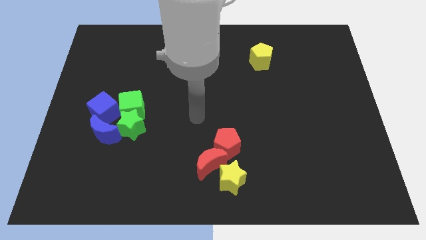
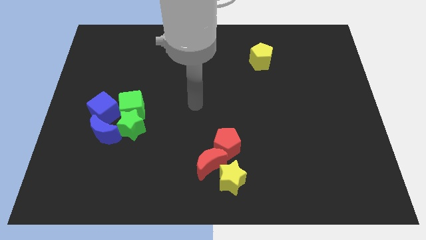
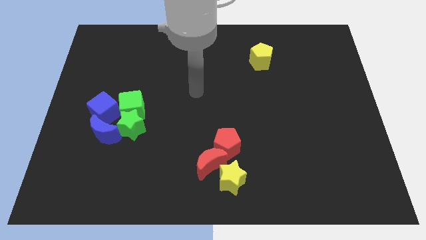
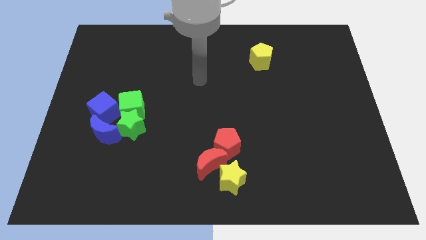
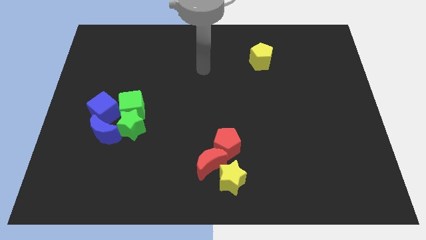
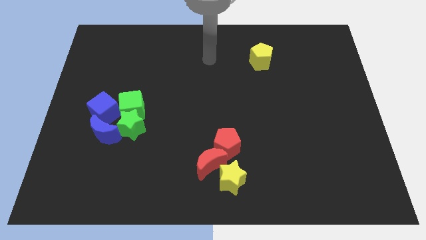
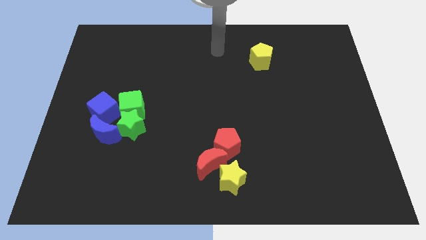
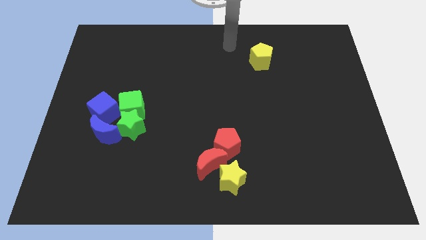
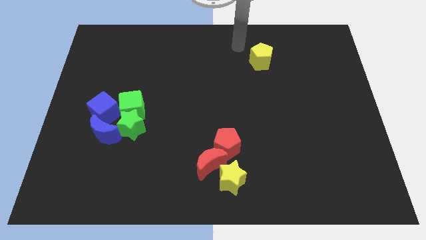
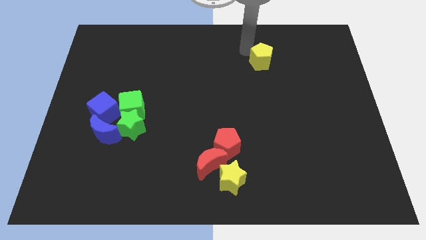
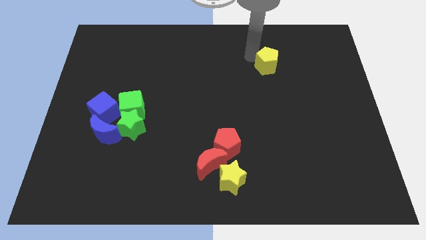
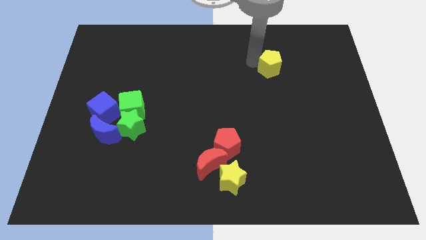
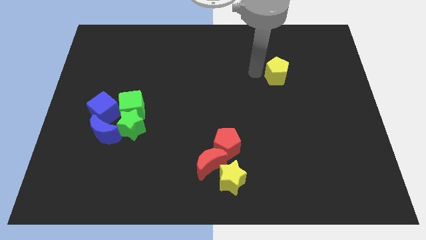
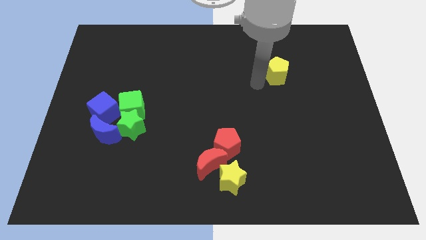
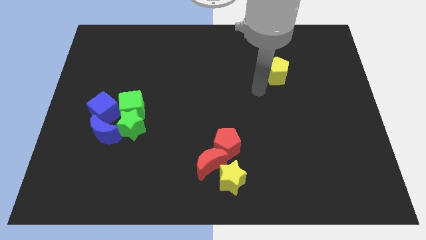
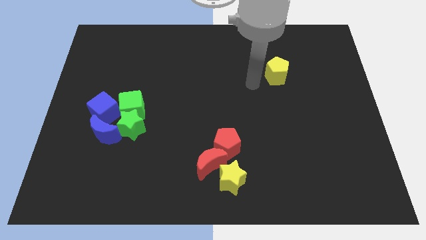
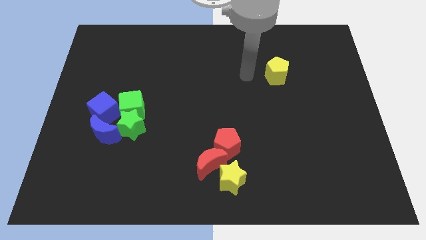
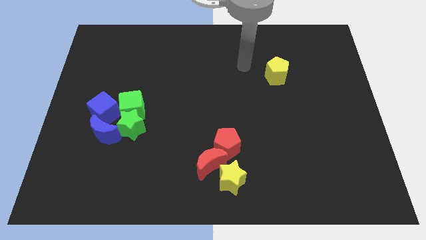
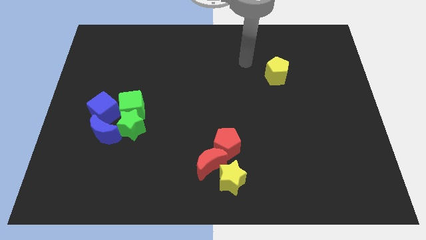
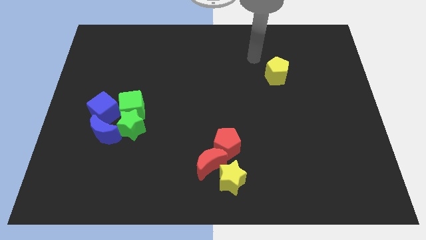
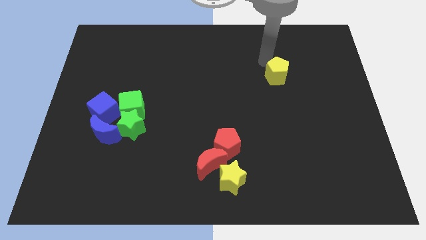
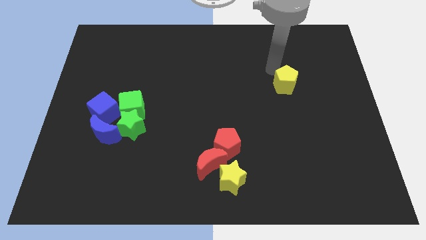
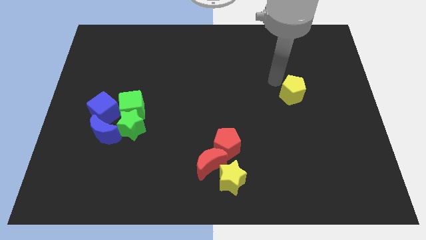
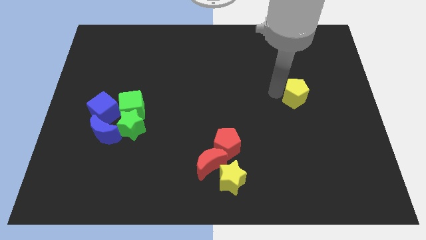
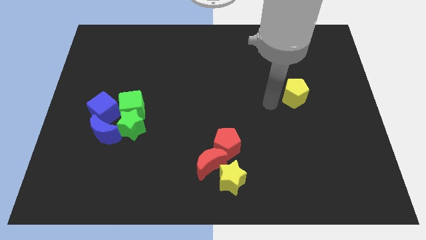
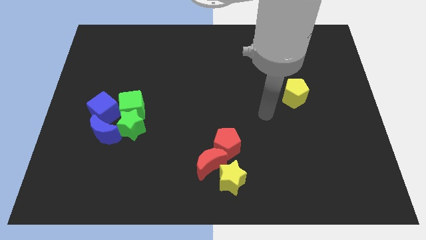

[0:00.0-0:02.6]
push the yellow pentagon towards bottom side

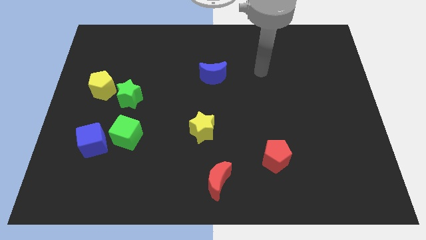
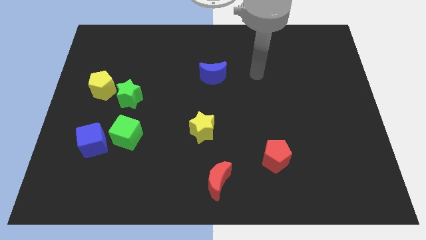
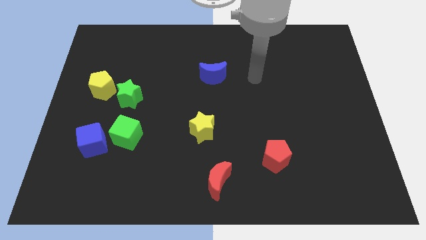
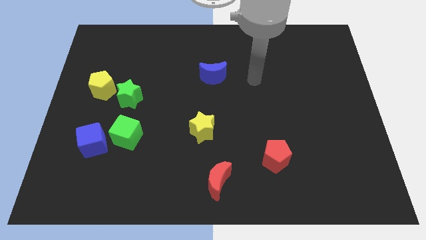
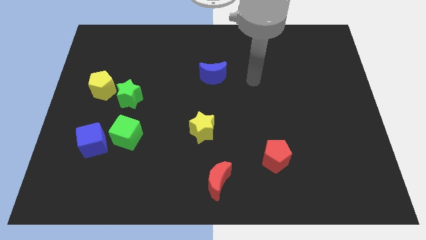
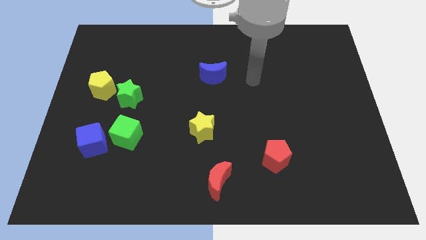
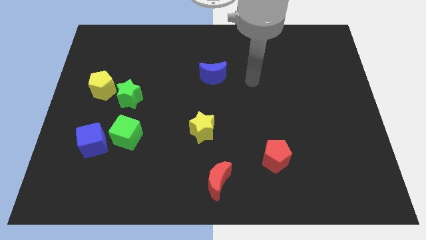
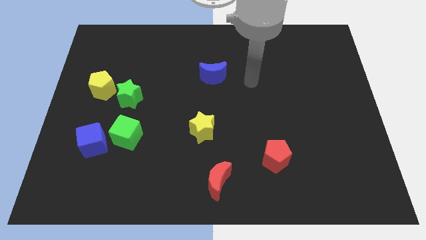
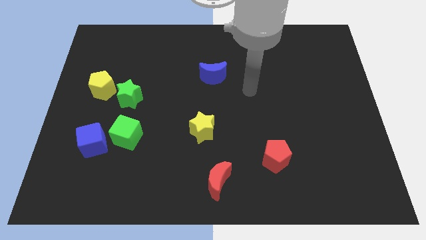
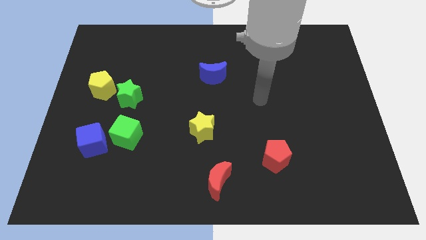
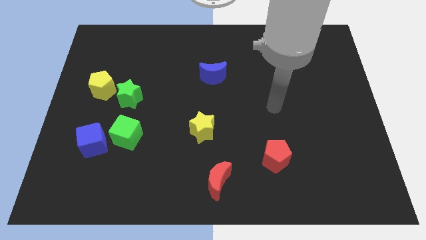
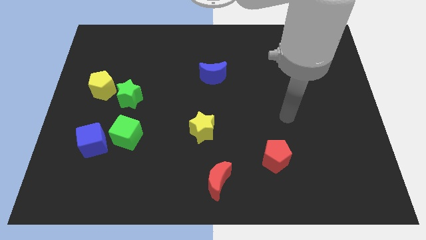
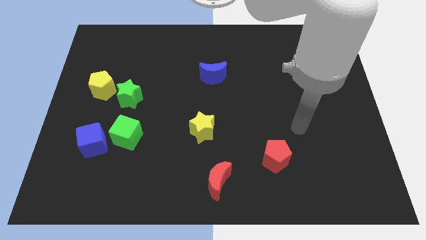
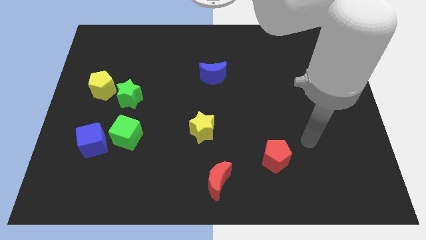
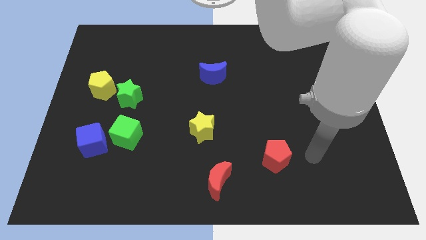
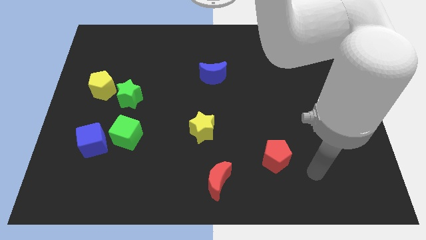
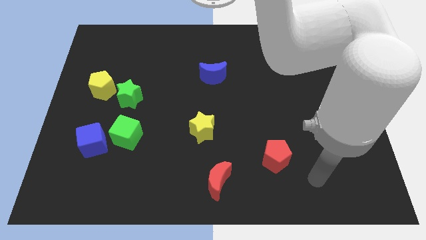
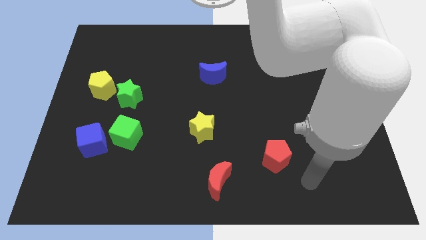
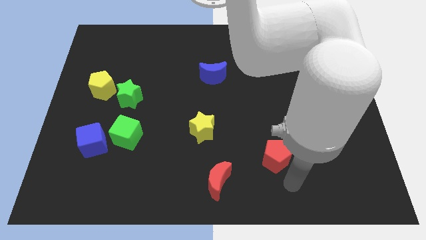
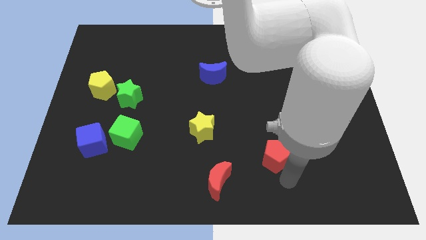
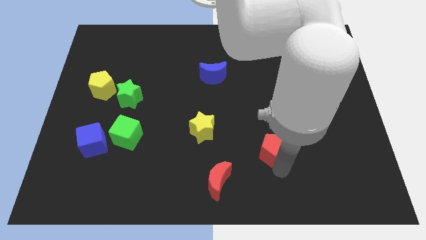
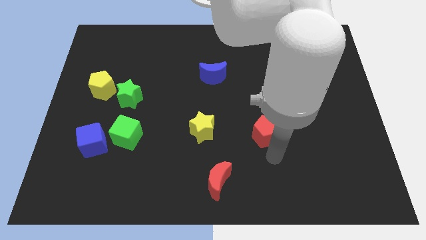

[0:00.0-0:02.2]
move the arm to the red crescent

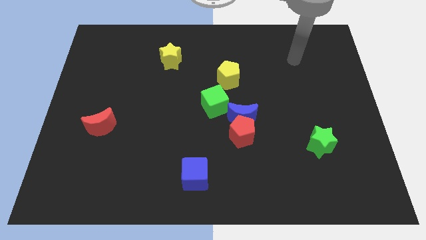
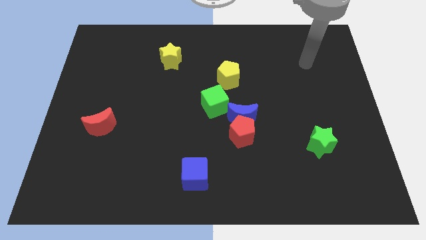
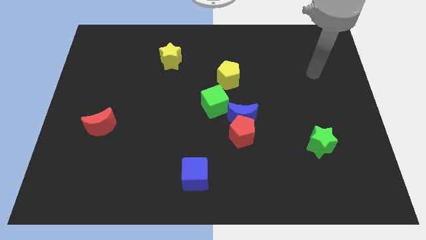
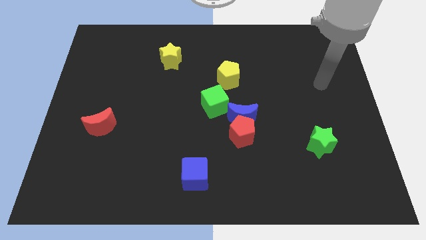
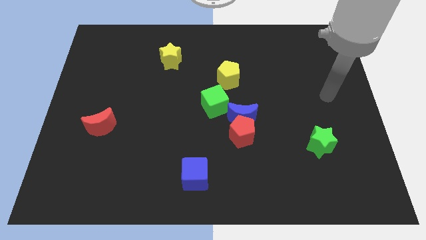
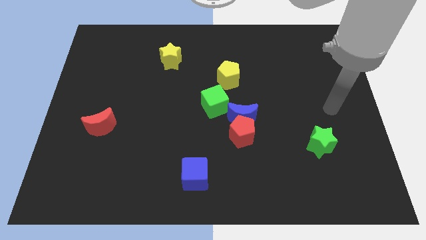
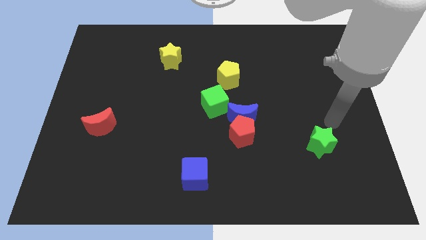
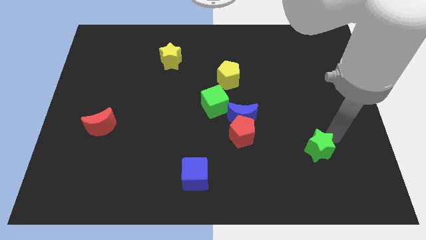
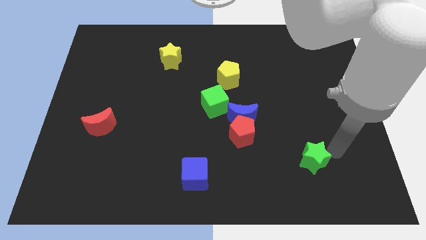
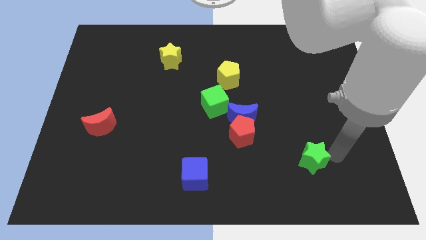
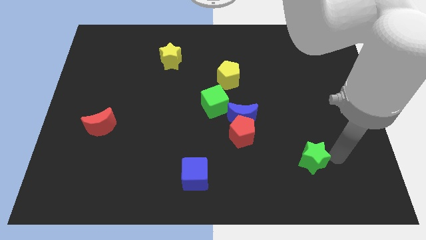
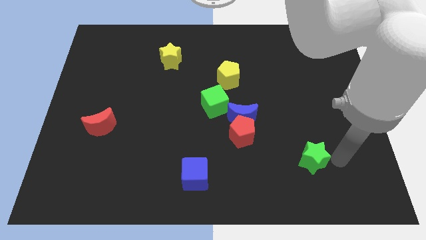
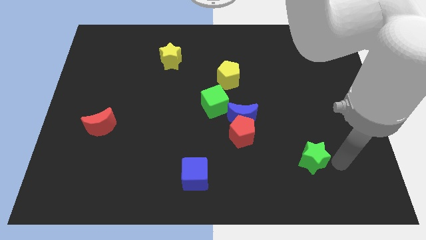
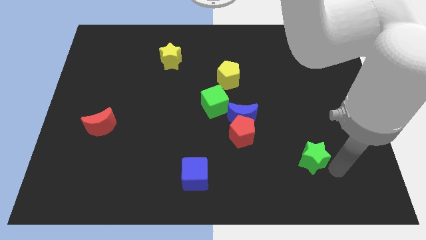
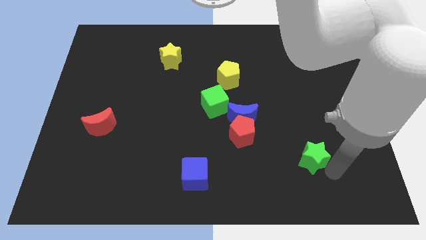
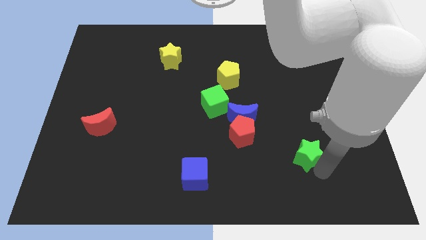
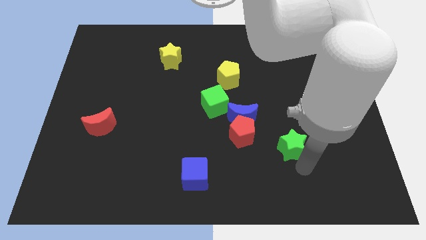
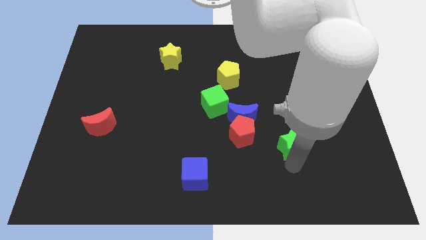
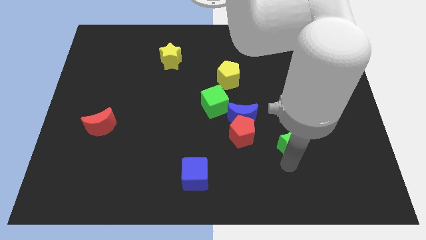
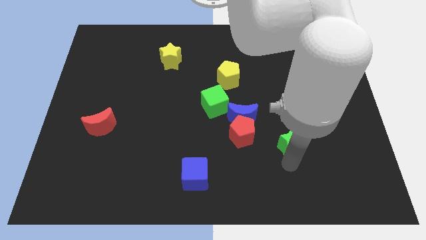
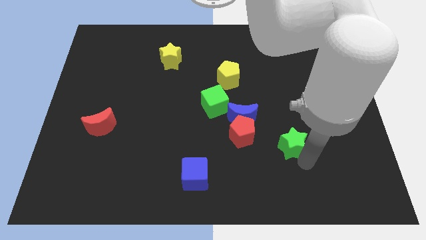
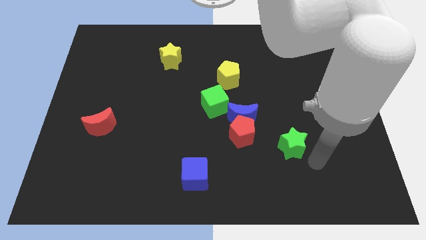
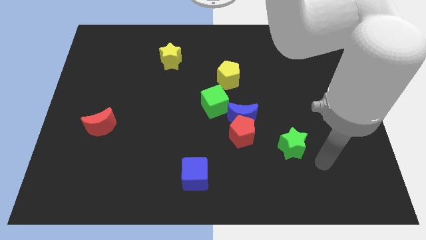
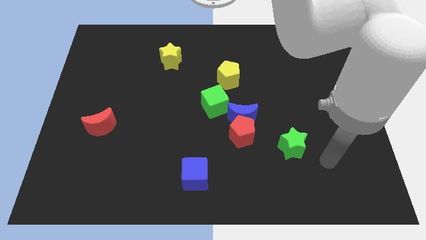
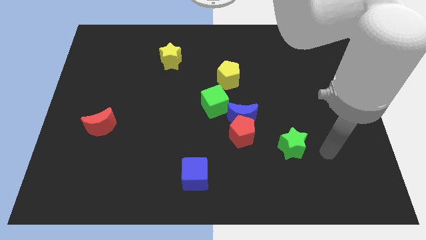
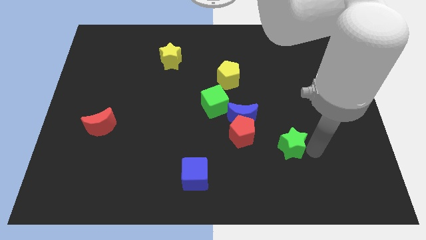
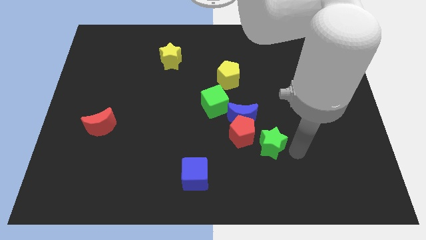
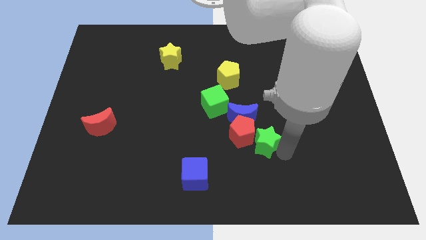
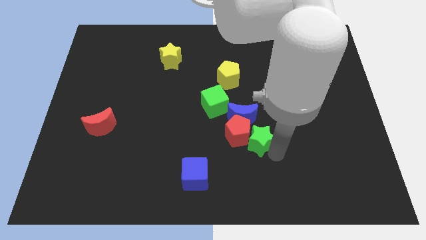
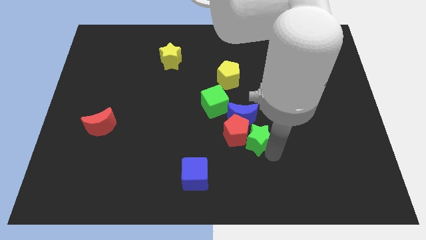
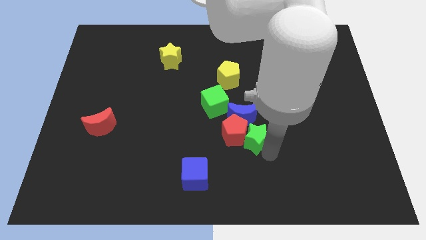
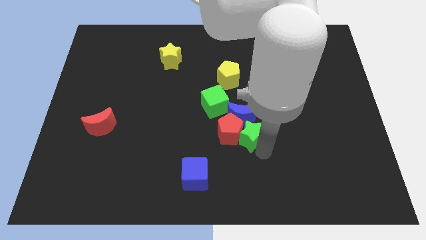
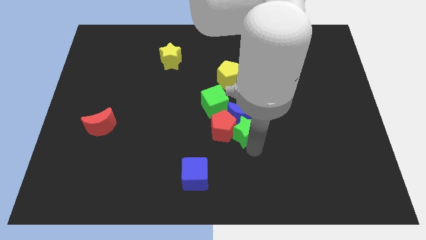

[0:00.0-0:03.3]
move the green star towards the right side of the red pentagon

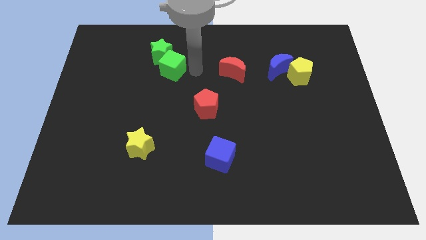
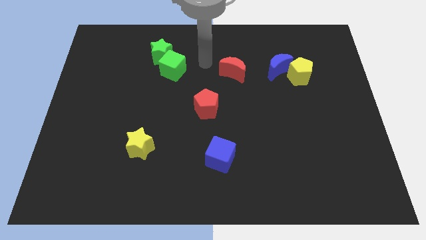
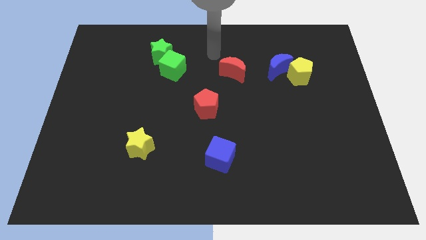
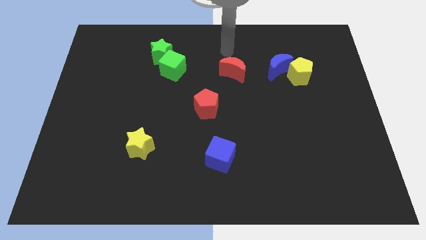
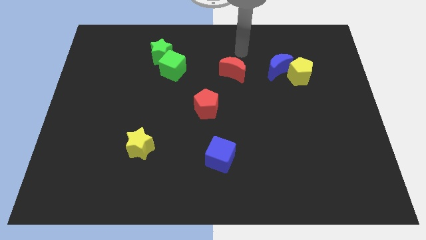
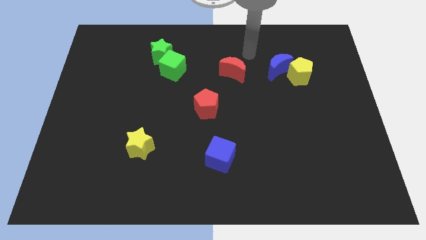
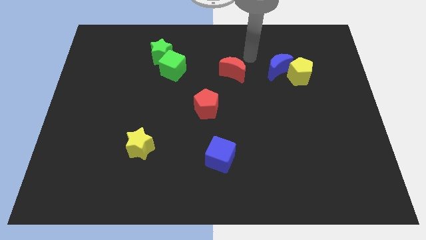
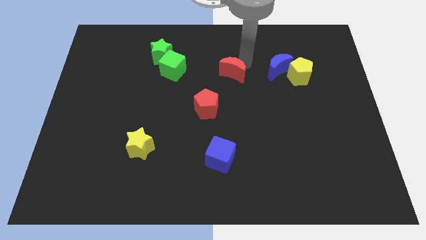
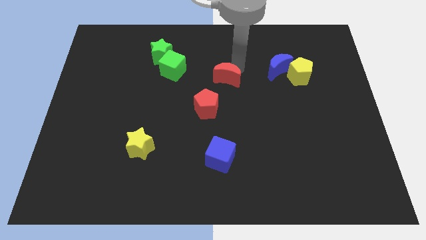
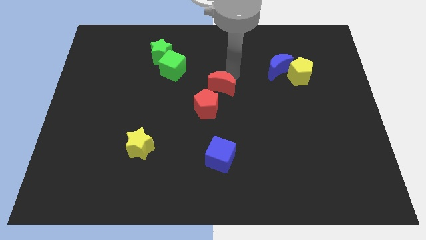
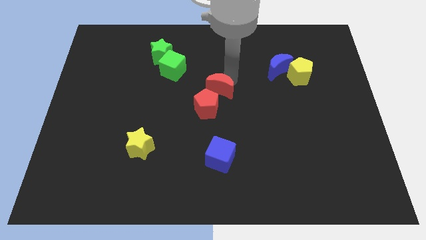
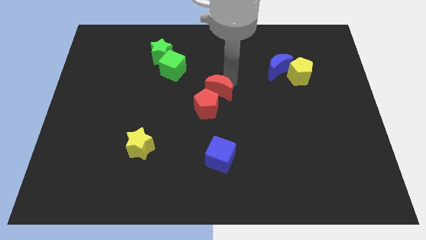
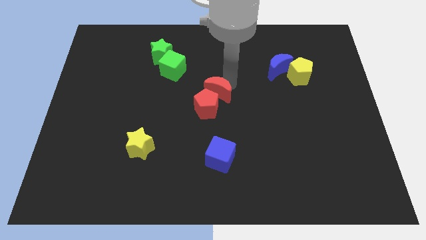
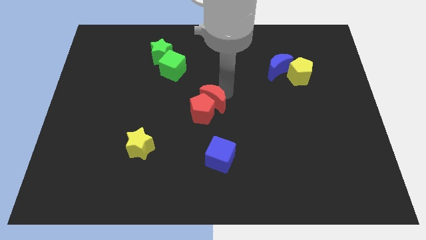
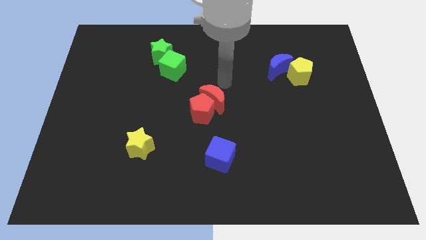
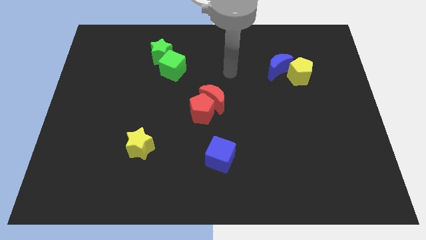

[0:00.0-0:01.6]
place the red moon on the top right of the red pentagon
